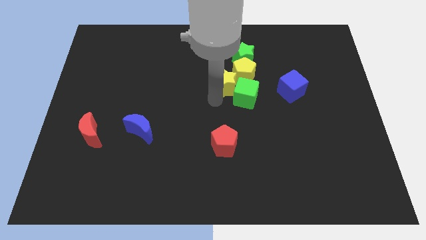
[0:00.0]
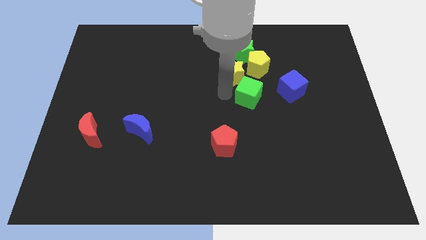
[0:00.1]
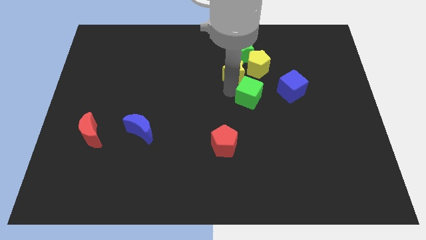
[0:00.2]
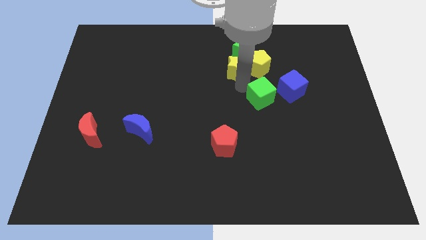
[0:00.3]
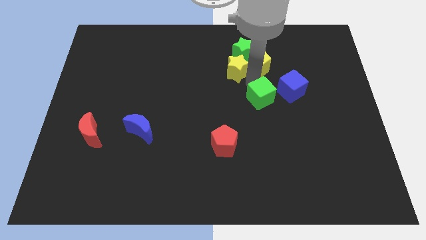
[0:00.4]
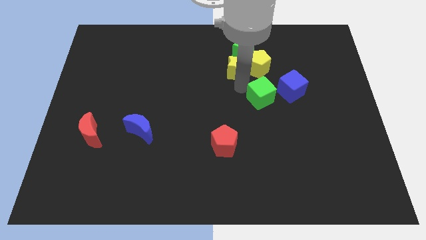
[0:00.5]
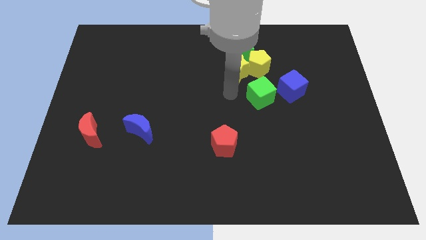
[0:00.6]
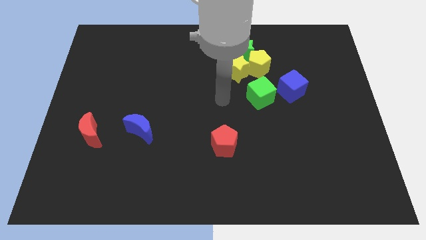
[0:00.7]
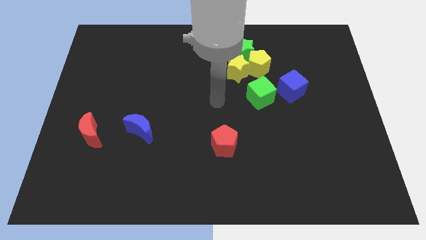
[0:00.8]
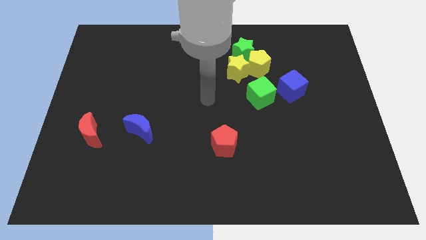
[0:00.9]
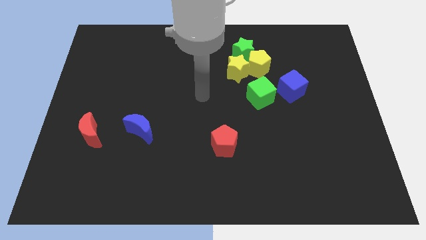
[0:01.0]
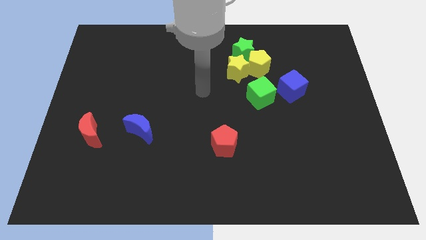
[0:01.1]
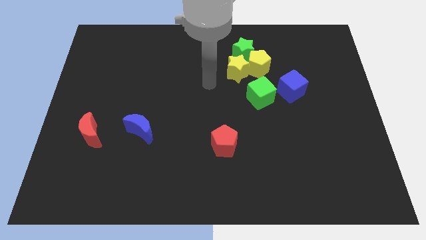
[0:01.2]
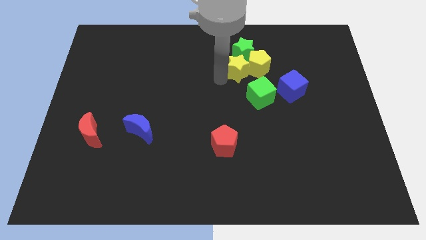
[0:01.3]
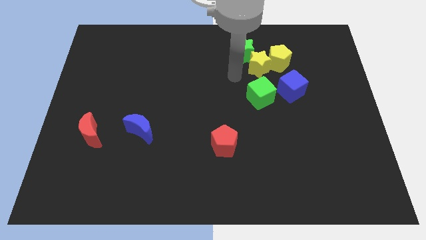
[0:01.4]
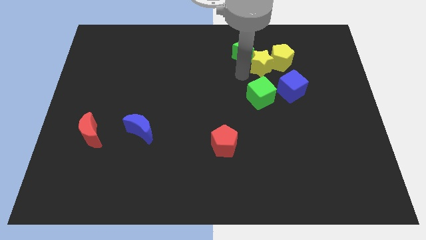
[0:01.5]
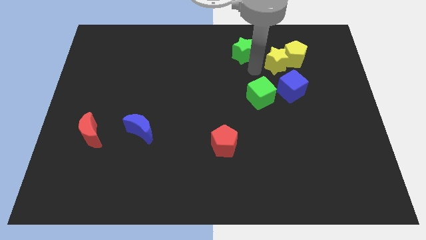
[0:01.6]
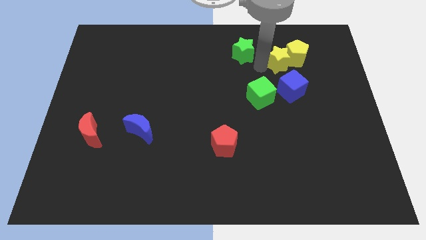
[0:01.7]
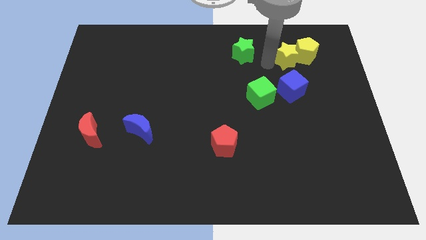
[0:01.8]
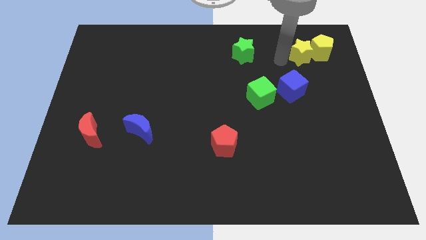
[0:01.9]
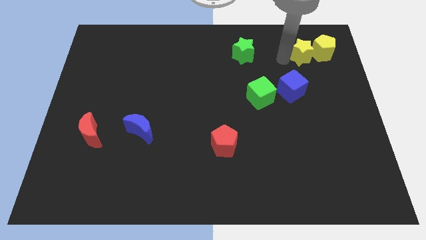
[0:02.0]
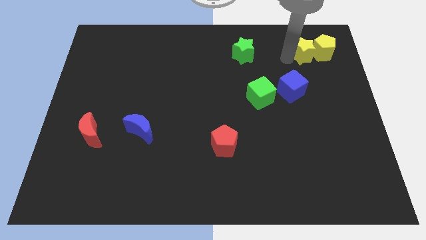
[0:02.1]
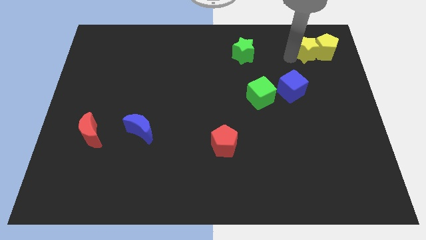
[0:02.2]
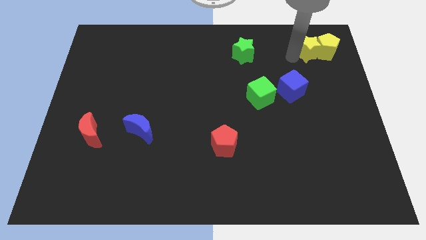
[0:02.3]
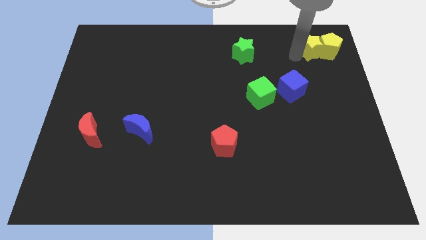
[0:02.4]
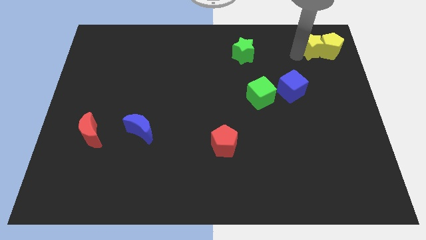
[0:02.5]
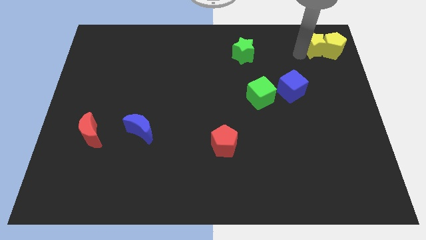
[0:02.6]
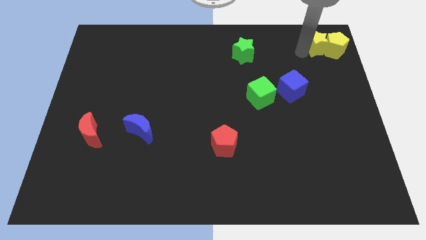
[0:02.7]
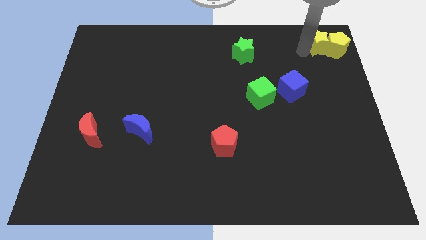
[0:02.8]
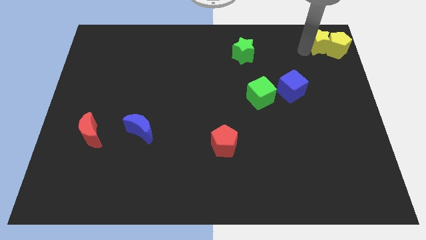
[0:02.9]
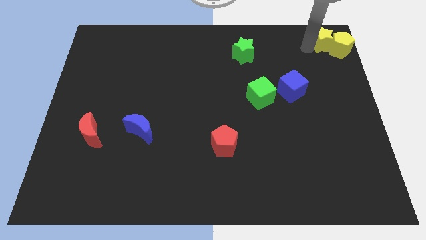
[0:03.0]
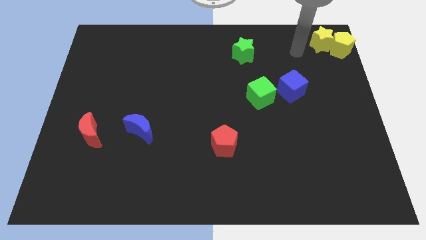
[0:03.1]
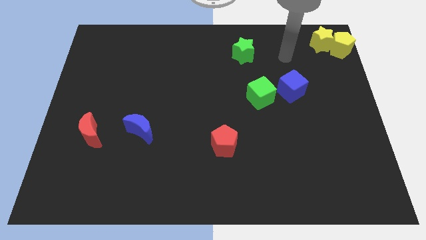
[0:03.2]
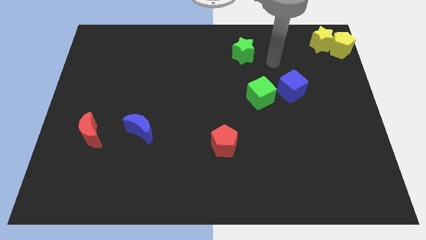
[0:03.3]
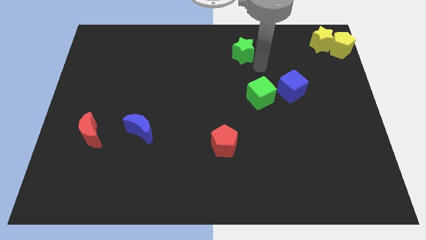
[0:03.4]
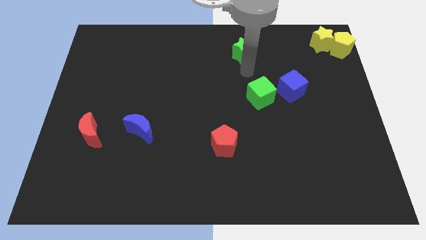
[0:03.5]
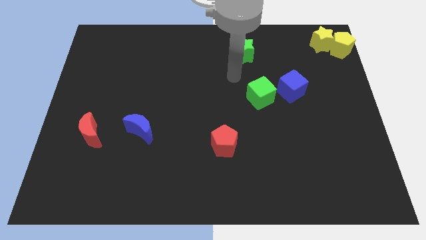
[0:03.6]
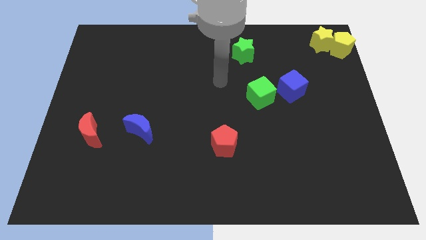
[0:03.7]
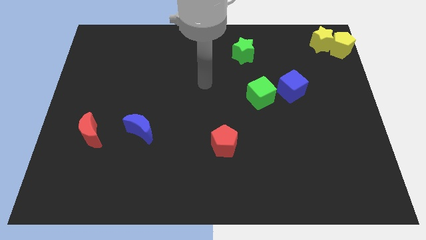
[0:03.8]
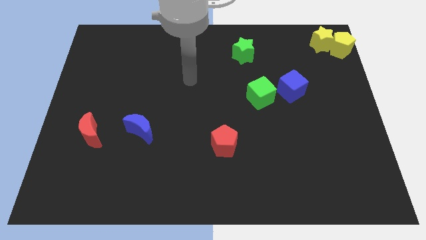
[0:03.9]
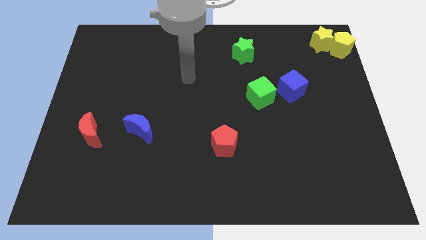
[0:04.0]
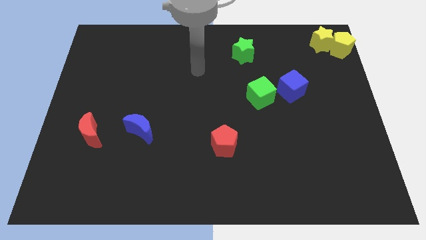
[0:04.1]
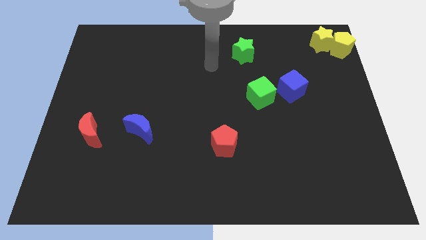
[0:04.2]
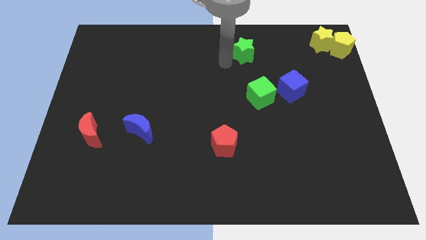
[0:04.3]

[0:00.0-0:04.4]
push the yellow star and yellow pentagon to the top right

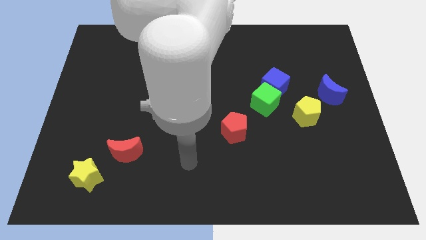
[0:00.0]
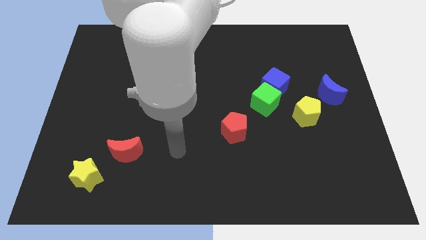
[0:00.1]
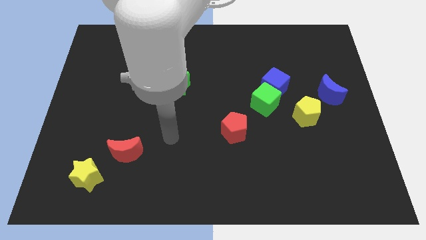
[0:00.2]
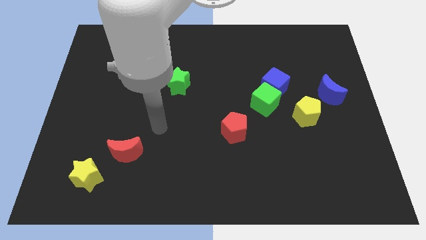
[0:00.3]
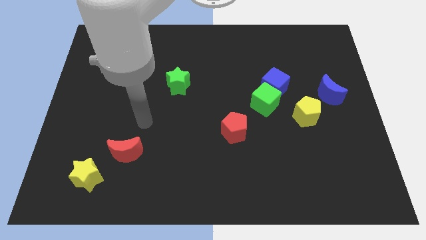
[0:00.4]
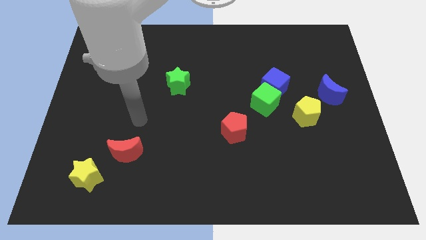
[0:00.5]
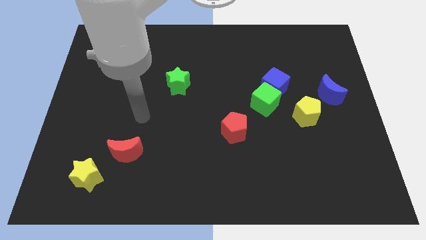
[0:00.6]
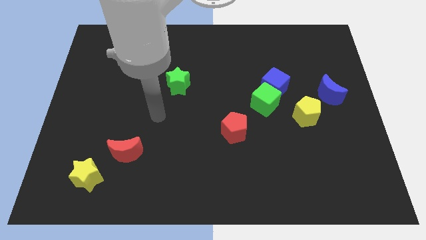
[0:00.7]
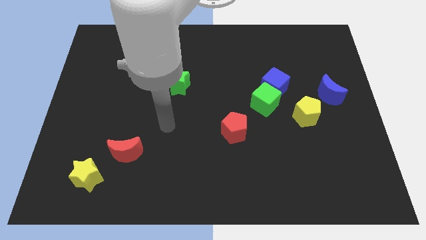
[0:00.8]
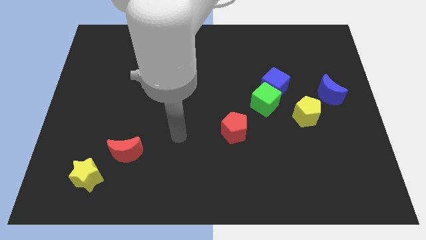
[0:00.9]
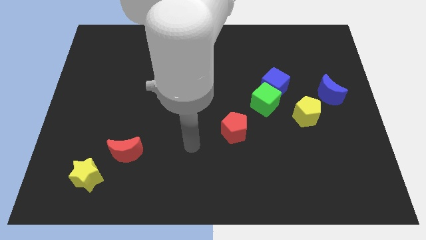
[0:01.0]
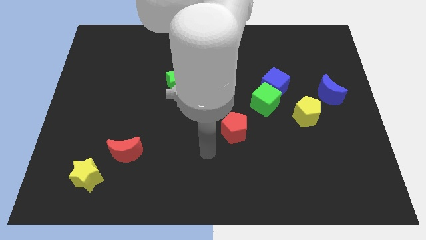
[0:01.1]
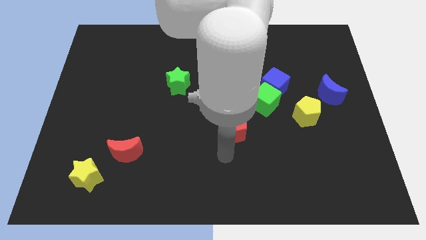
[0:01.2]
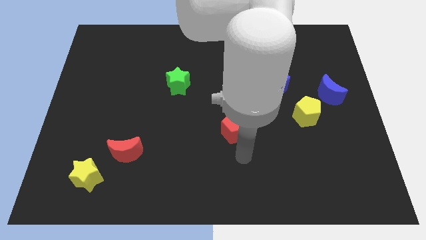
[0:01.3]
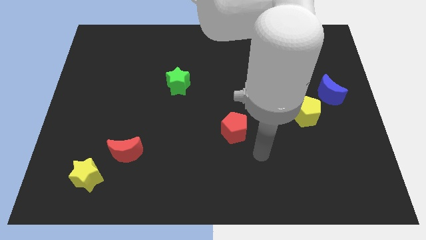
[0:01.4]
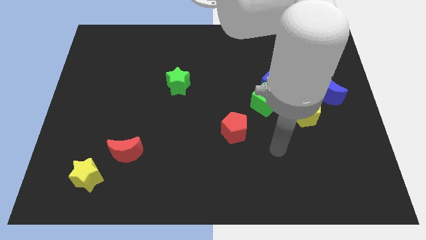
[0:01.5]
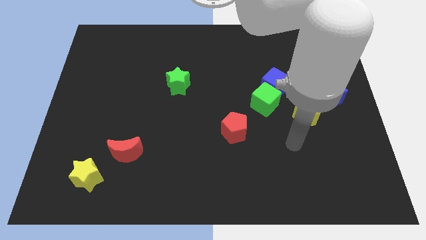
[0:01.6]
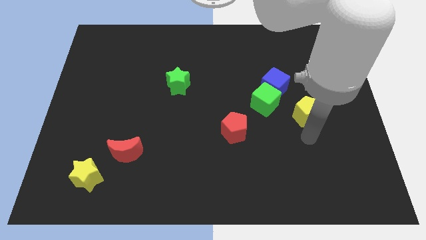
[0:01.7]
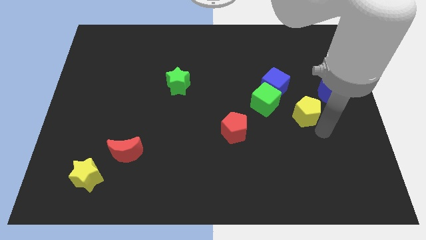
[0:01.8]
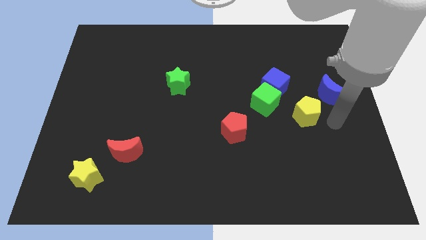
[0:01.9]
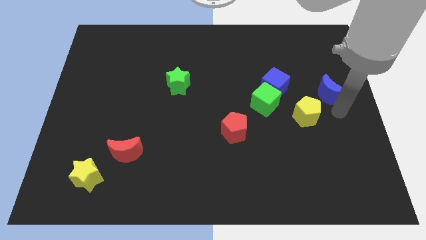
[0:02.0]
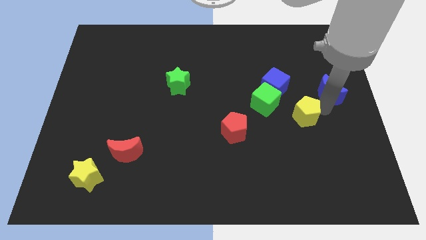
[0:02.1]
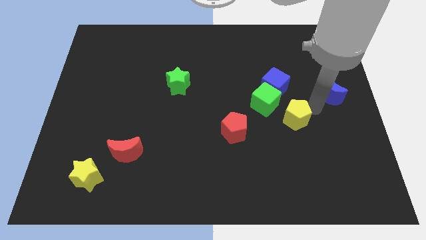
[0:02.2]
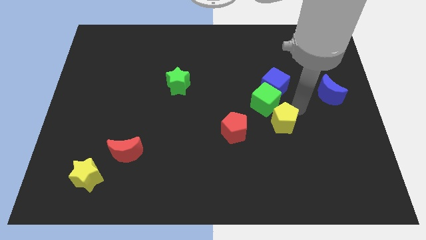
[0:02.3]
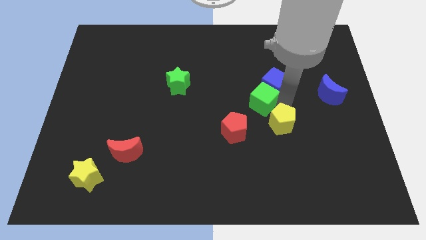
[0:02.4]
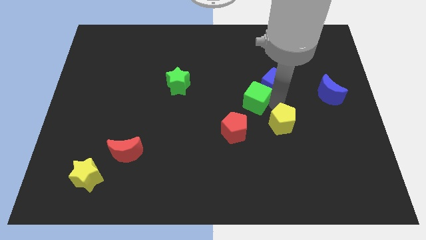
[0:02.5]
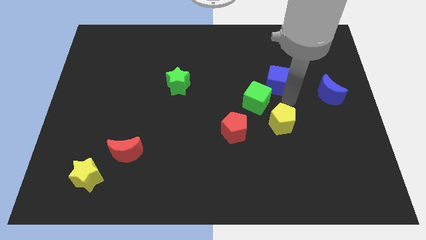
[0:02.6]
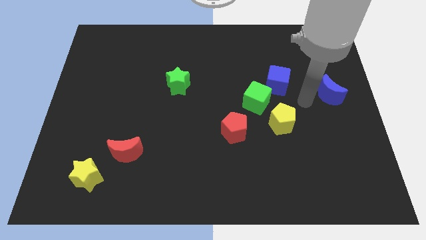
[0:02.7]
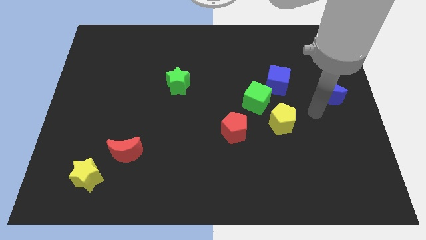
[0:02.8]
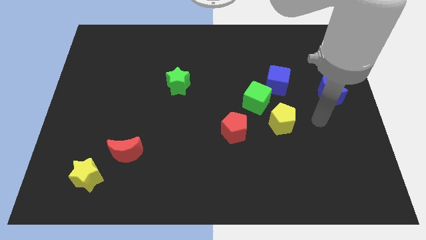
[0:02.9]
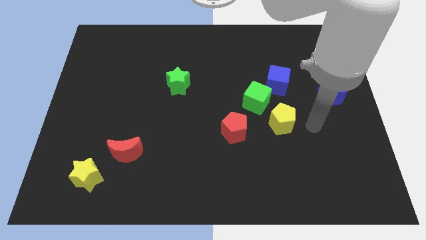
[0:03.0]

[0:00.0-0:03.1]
slide yellow pentagon below the blue cube

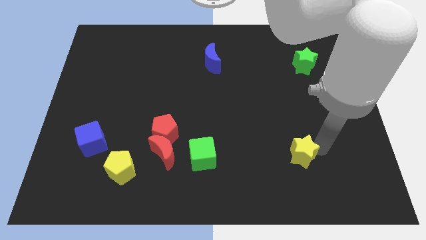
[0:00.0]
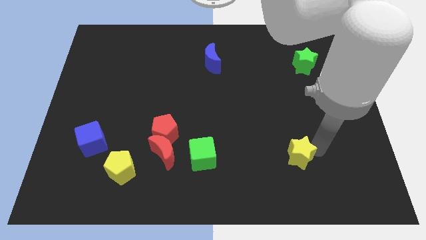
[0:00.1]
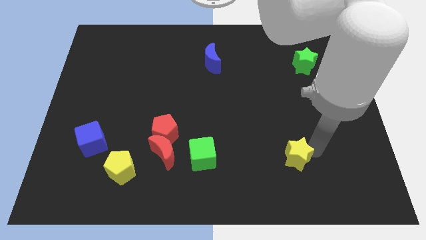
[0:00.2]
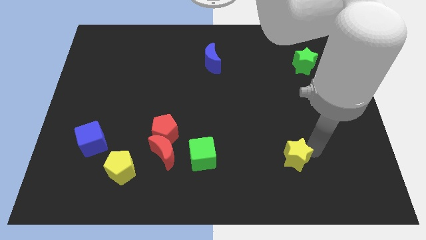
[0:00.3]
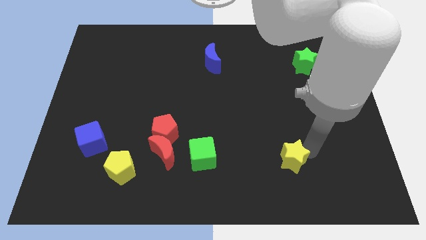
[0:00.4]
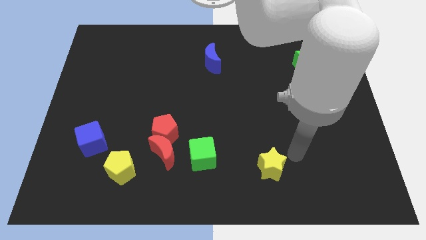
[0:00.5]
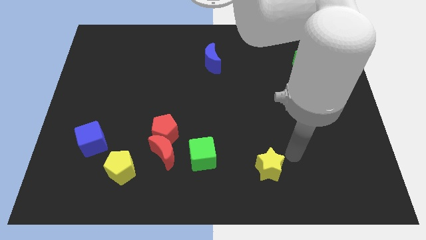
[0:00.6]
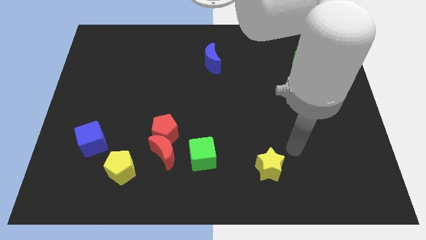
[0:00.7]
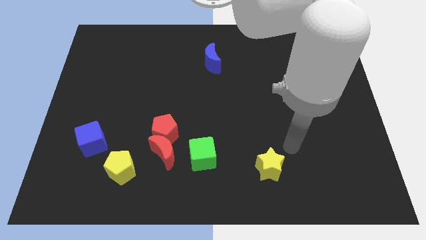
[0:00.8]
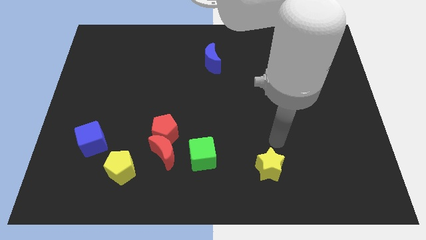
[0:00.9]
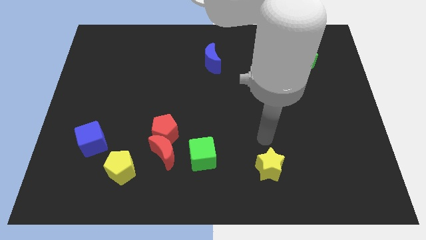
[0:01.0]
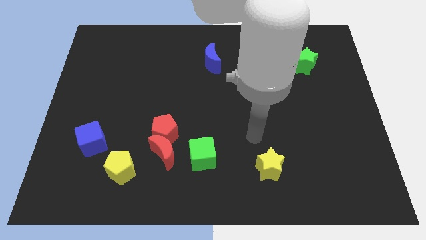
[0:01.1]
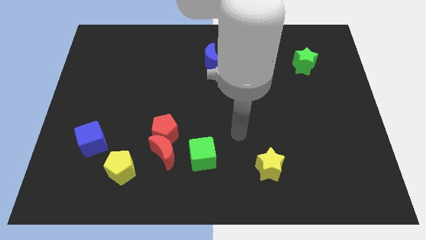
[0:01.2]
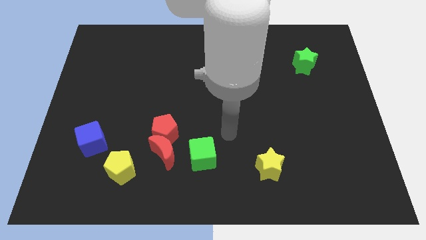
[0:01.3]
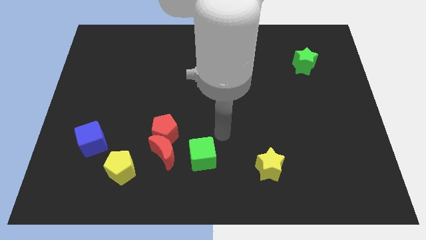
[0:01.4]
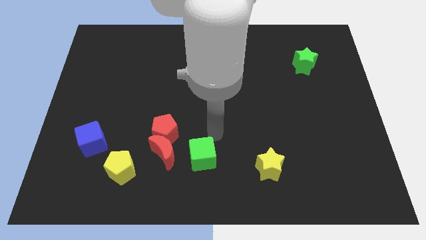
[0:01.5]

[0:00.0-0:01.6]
slide the yellow star towards the green cube
